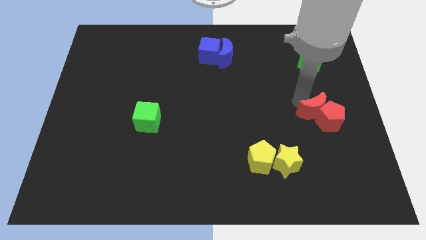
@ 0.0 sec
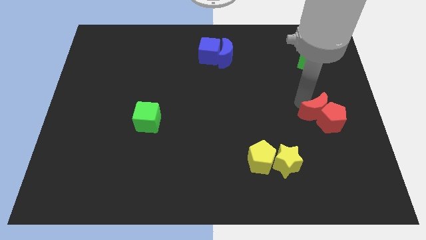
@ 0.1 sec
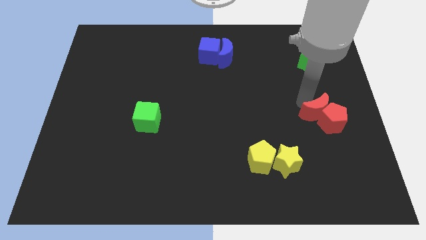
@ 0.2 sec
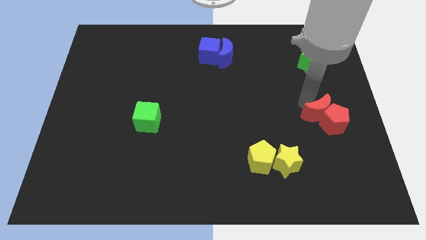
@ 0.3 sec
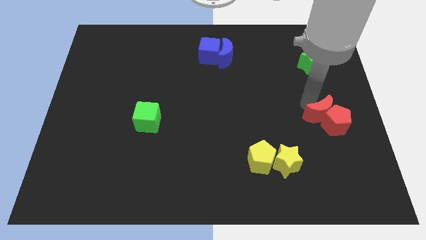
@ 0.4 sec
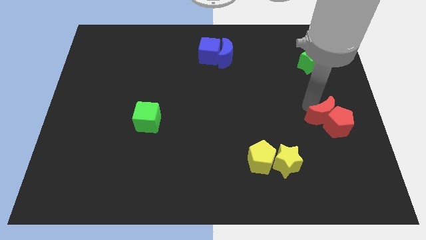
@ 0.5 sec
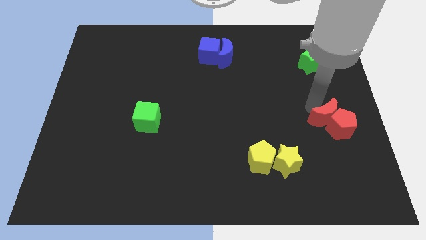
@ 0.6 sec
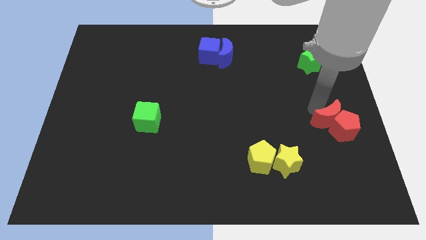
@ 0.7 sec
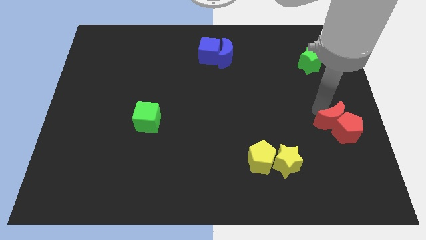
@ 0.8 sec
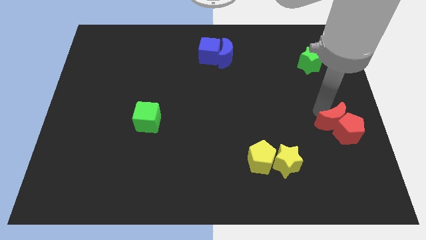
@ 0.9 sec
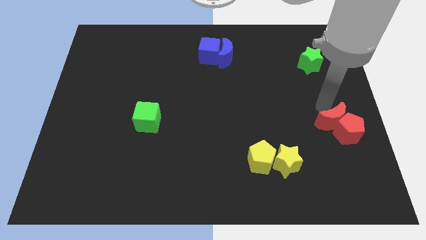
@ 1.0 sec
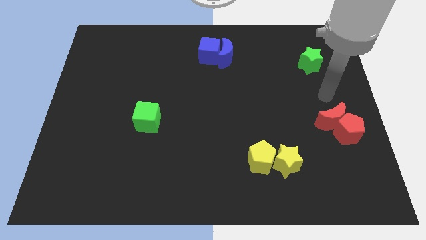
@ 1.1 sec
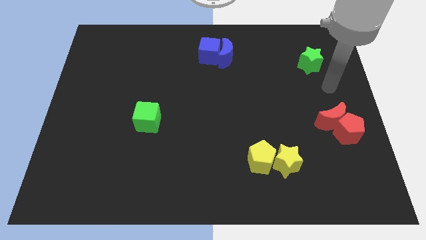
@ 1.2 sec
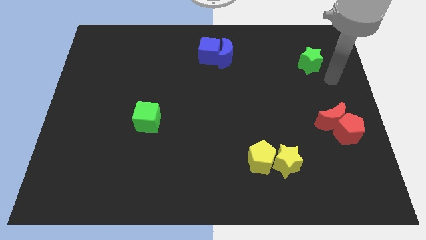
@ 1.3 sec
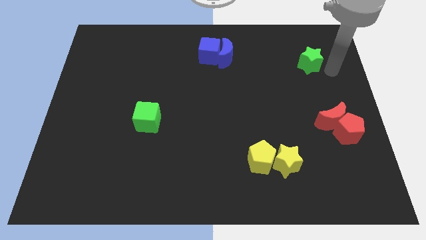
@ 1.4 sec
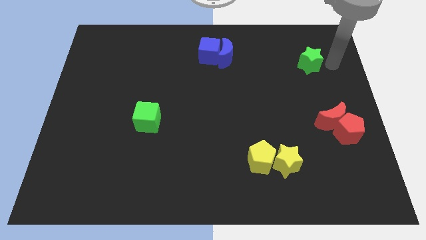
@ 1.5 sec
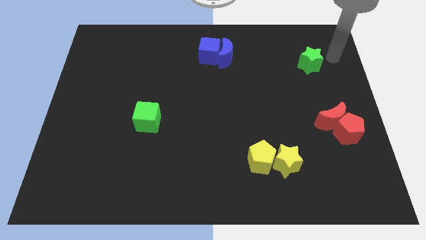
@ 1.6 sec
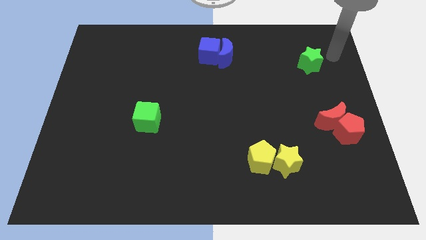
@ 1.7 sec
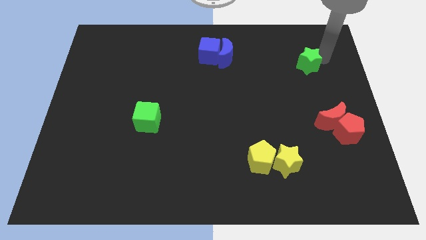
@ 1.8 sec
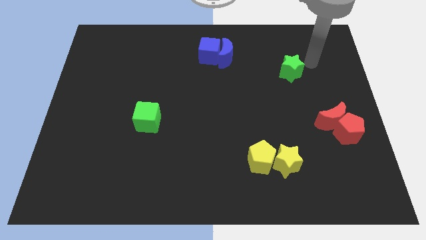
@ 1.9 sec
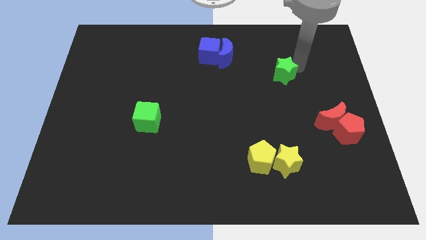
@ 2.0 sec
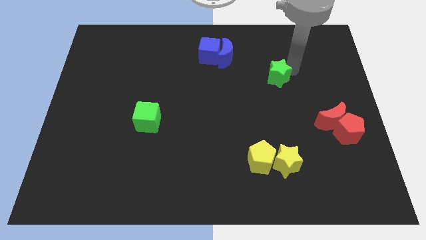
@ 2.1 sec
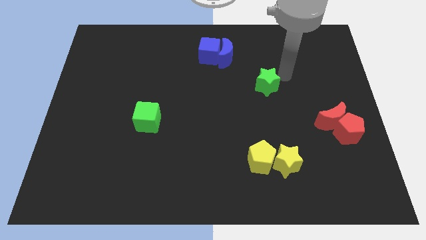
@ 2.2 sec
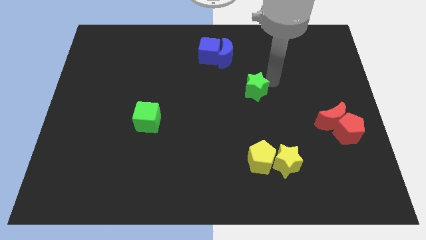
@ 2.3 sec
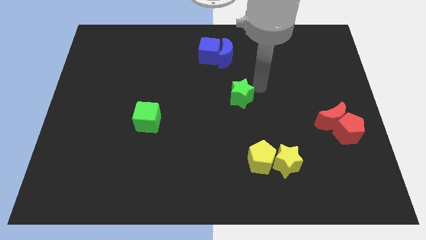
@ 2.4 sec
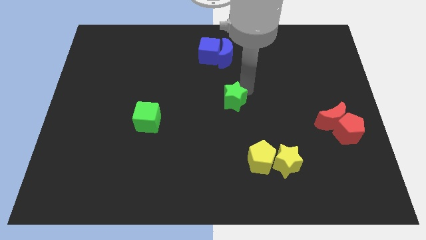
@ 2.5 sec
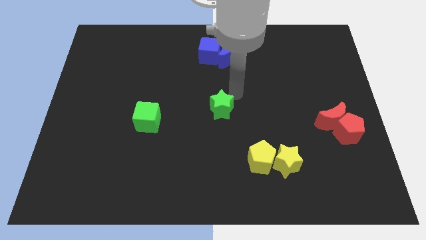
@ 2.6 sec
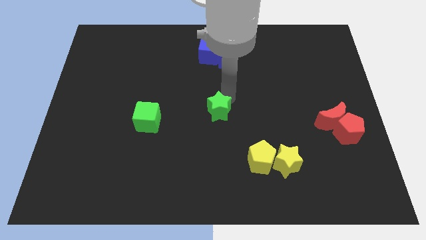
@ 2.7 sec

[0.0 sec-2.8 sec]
place the green star at the centre of the board

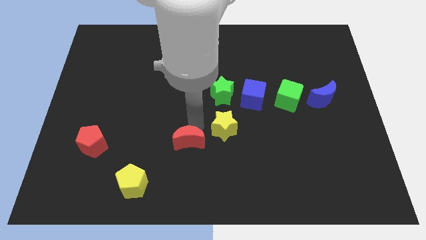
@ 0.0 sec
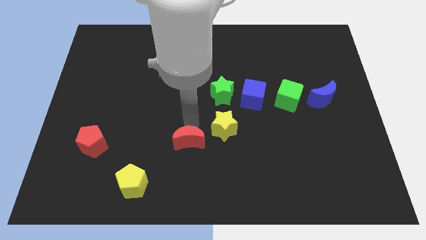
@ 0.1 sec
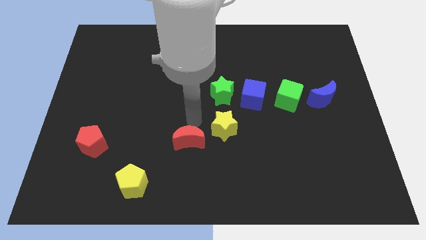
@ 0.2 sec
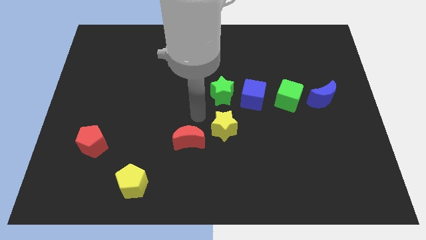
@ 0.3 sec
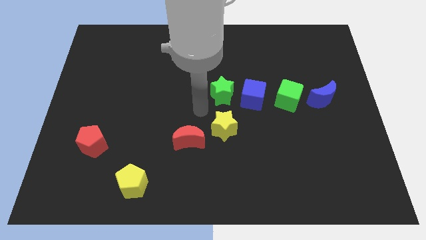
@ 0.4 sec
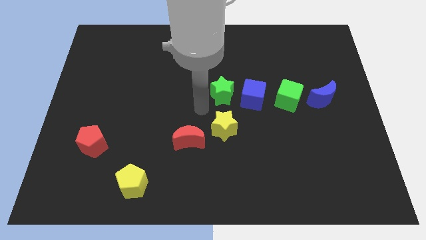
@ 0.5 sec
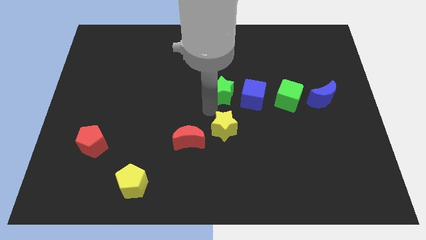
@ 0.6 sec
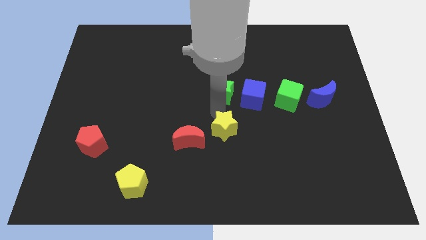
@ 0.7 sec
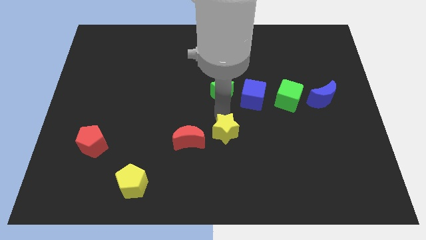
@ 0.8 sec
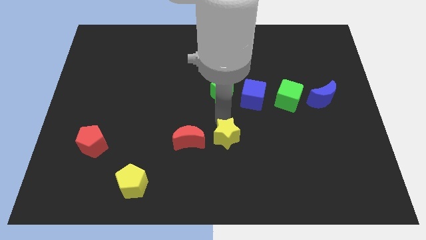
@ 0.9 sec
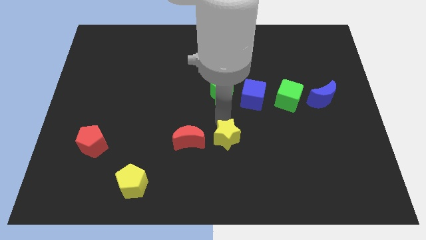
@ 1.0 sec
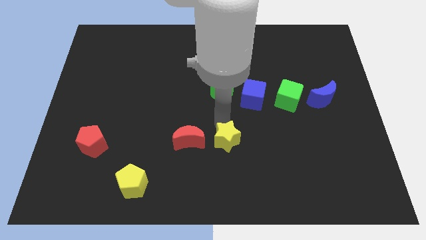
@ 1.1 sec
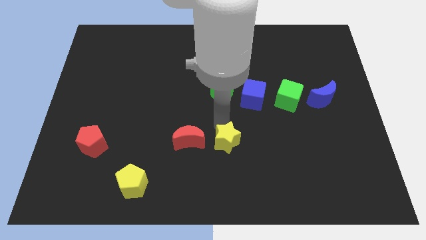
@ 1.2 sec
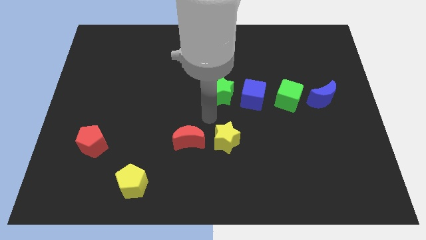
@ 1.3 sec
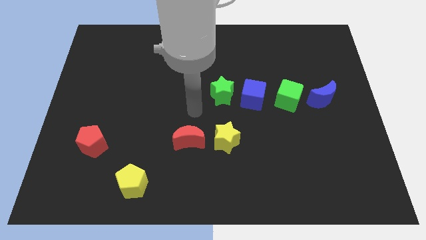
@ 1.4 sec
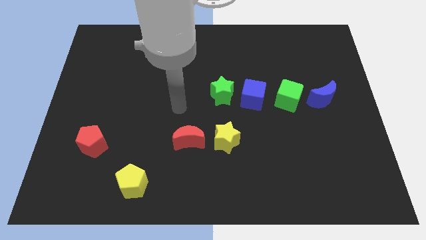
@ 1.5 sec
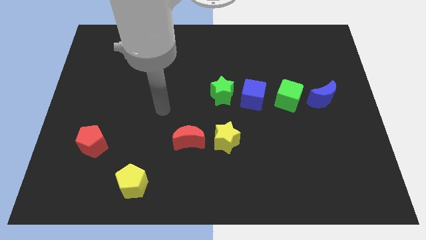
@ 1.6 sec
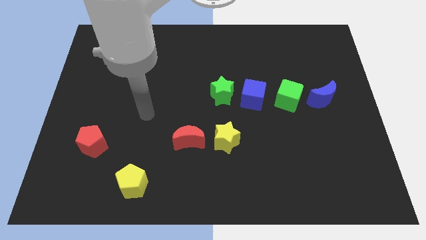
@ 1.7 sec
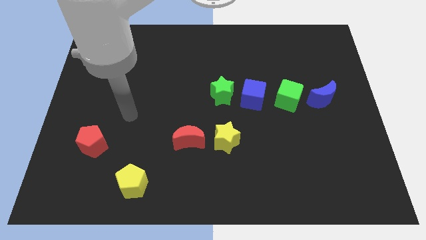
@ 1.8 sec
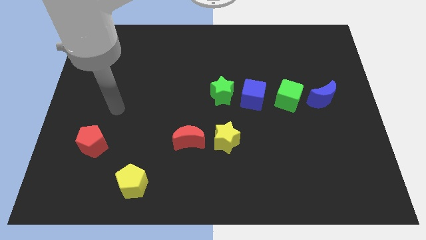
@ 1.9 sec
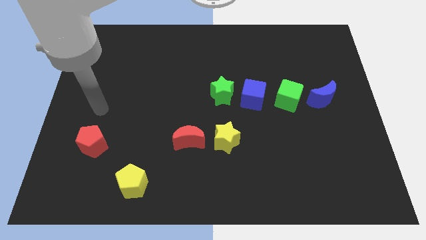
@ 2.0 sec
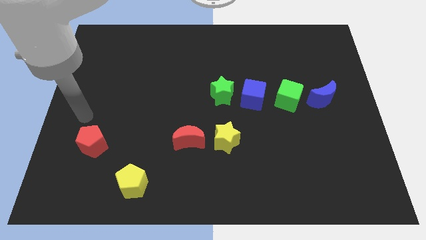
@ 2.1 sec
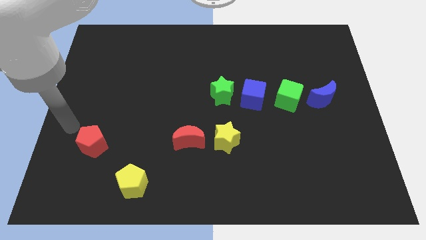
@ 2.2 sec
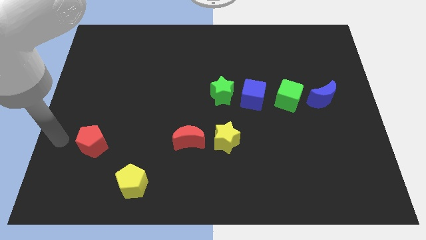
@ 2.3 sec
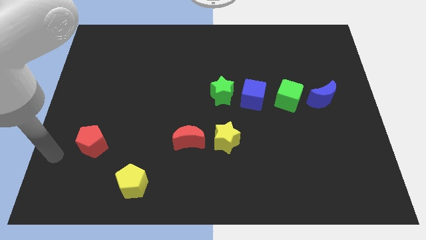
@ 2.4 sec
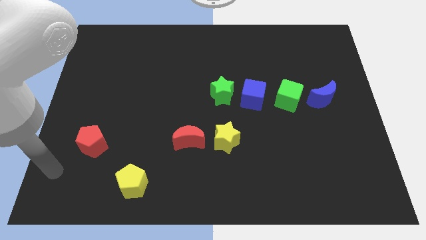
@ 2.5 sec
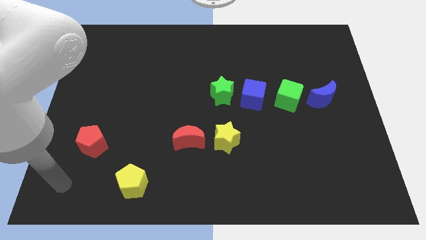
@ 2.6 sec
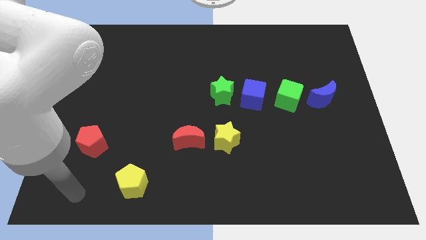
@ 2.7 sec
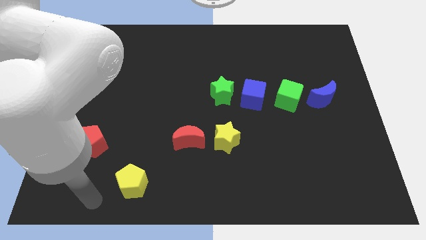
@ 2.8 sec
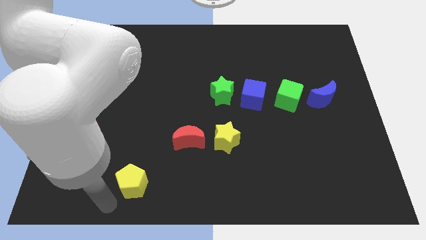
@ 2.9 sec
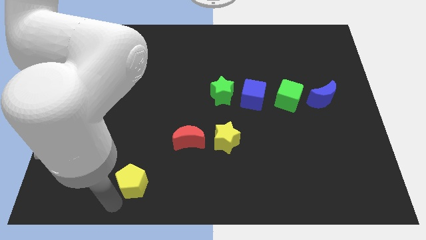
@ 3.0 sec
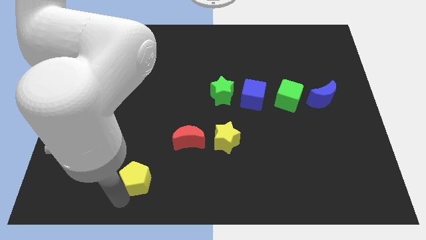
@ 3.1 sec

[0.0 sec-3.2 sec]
move your arm towards the ellow pentagon

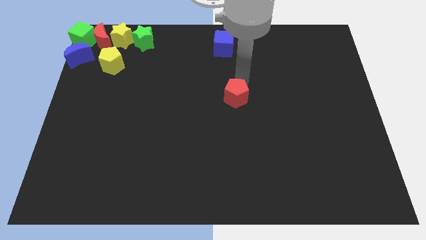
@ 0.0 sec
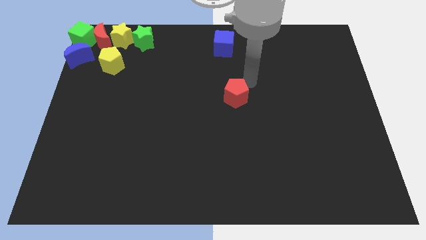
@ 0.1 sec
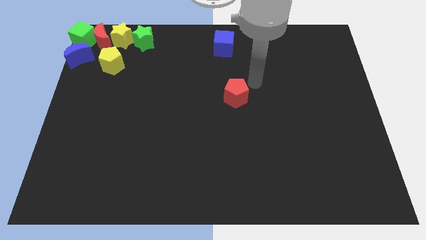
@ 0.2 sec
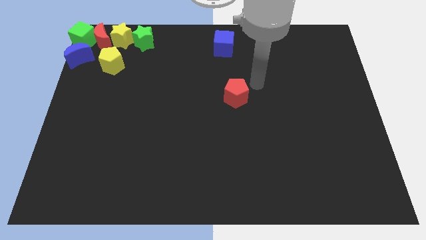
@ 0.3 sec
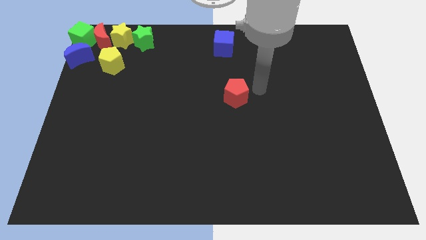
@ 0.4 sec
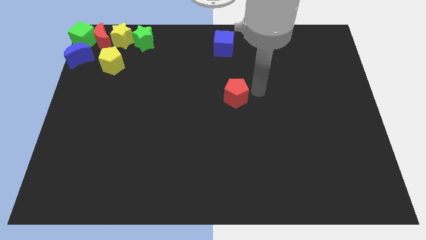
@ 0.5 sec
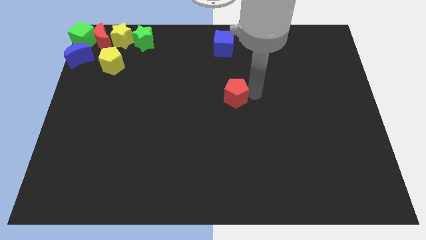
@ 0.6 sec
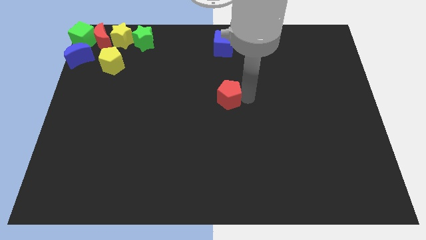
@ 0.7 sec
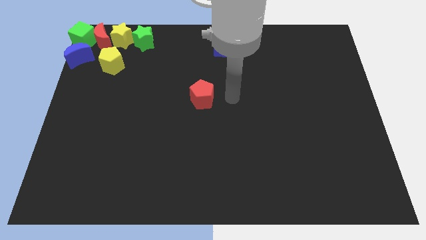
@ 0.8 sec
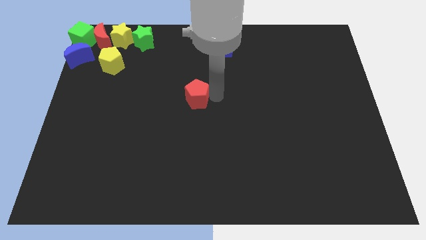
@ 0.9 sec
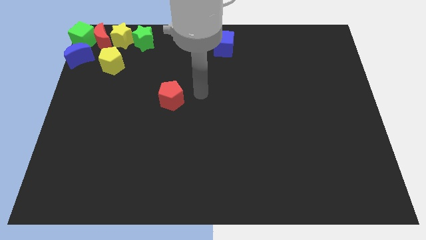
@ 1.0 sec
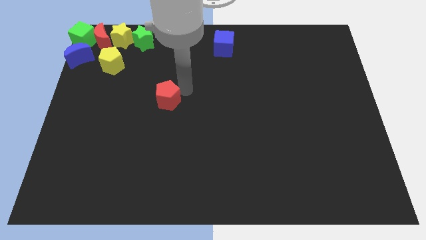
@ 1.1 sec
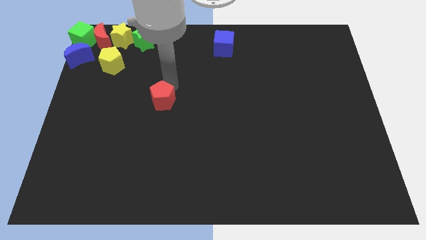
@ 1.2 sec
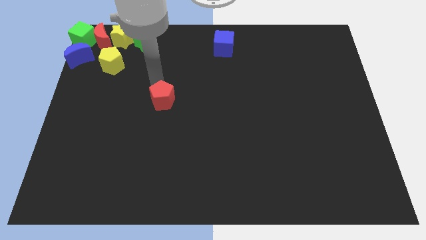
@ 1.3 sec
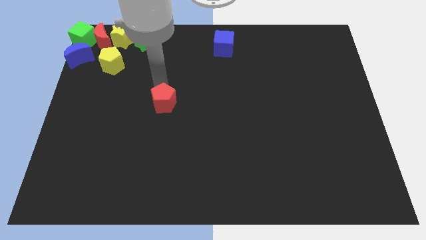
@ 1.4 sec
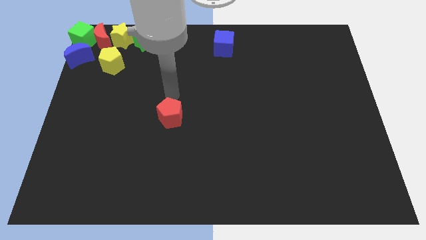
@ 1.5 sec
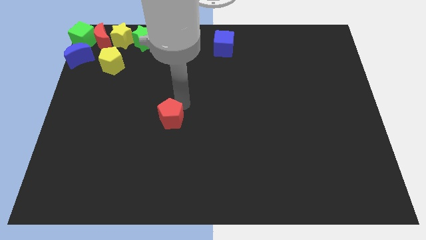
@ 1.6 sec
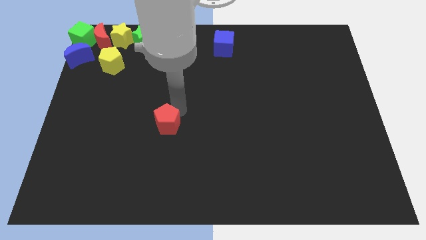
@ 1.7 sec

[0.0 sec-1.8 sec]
move the red pentagon slightly to the bottom side of the board

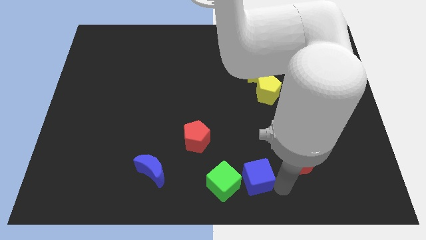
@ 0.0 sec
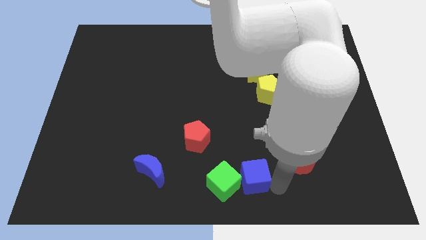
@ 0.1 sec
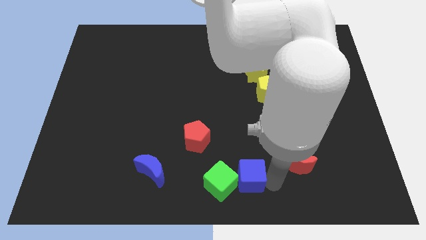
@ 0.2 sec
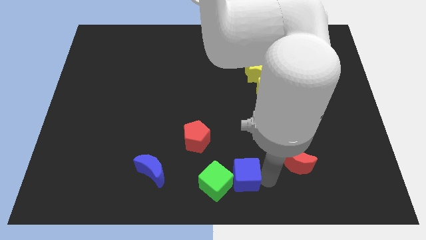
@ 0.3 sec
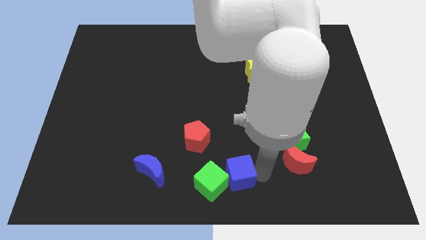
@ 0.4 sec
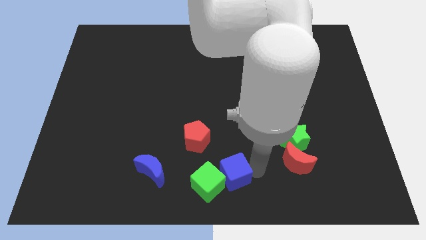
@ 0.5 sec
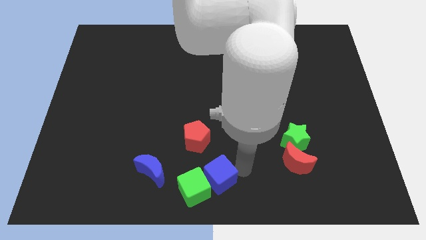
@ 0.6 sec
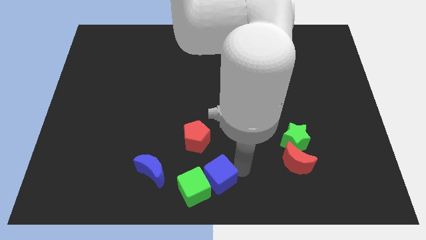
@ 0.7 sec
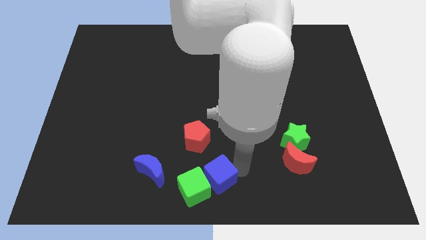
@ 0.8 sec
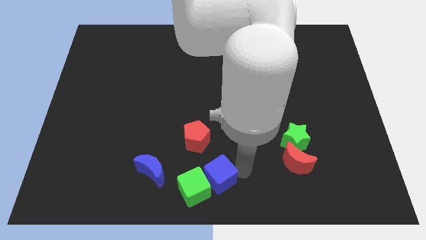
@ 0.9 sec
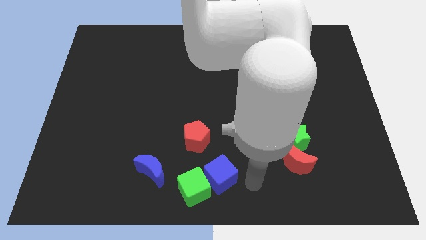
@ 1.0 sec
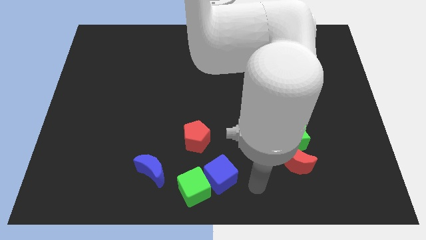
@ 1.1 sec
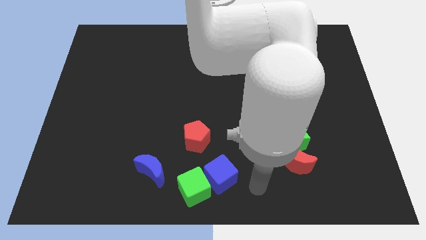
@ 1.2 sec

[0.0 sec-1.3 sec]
push the green cube to the left side slightly with the blue cube
